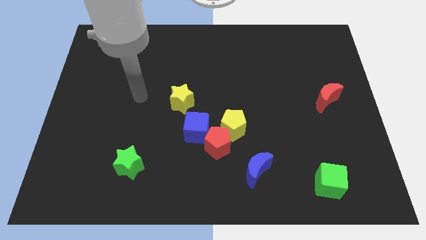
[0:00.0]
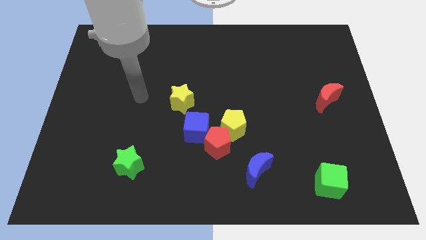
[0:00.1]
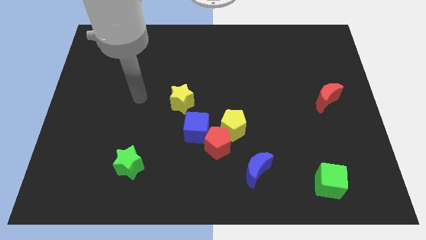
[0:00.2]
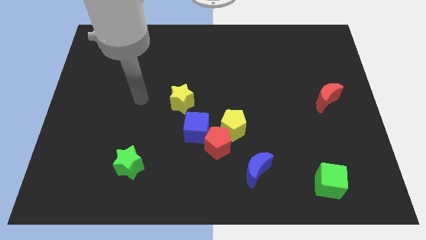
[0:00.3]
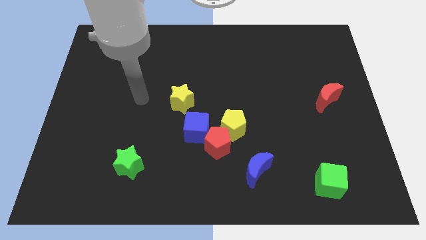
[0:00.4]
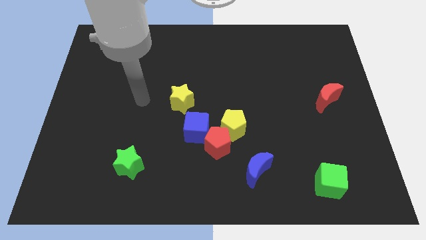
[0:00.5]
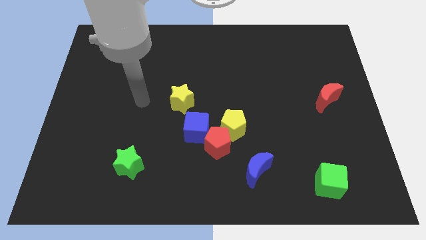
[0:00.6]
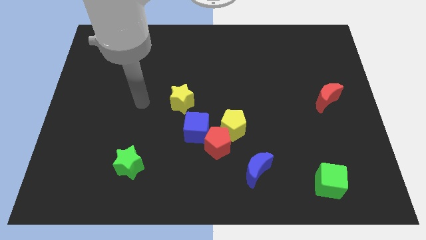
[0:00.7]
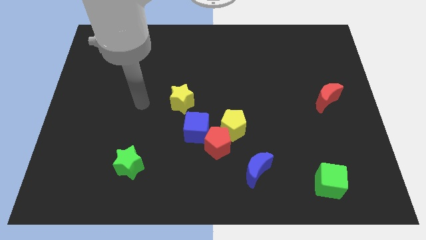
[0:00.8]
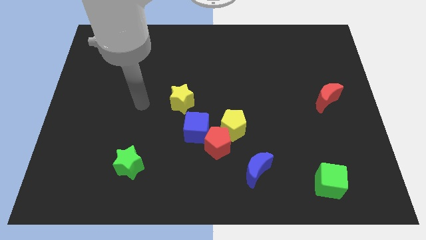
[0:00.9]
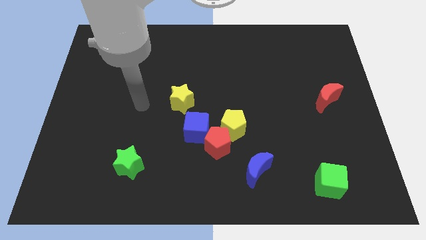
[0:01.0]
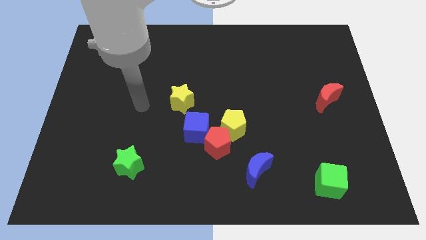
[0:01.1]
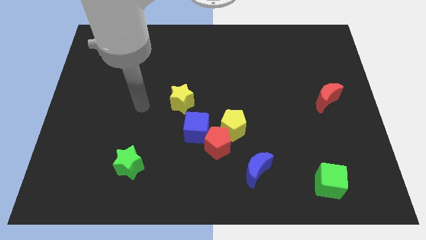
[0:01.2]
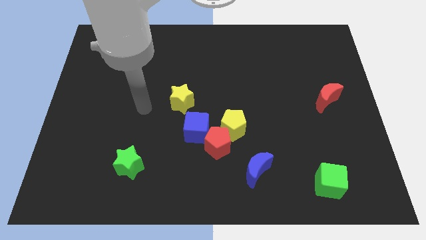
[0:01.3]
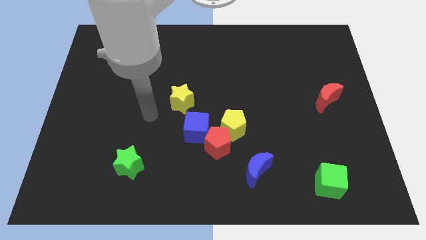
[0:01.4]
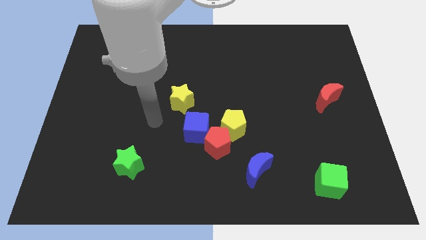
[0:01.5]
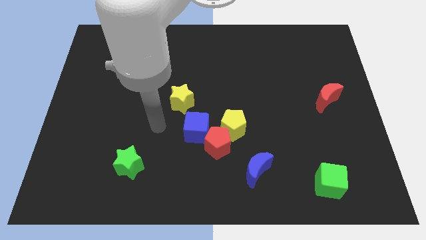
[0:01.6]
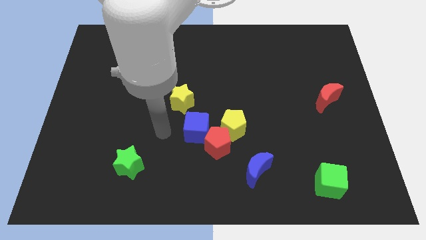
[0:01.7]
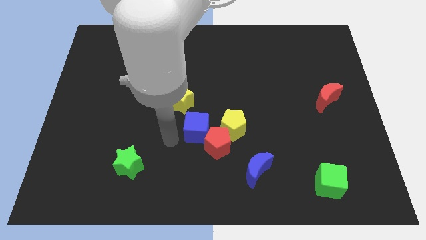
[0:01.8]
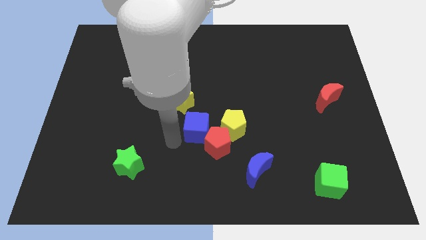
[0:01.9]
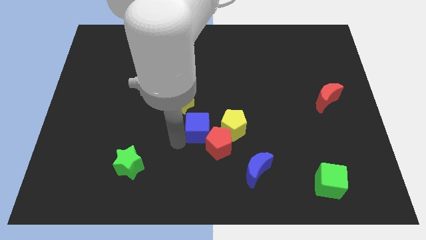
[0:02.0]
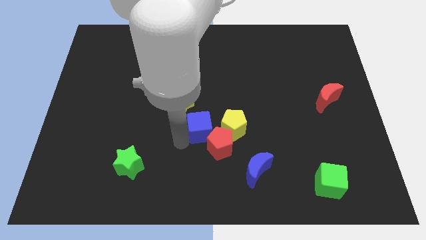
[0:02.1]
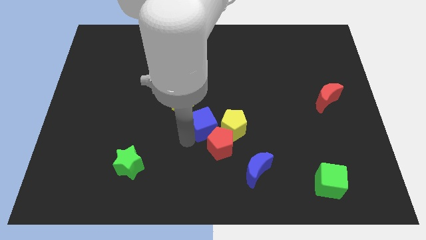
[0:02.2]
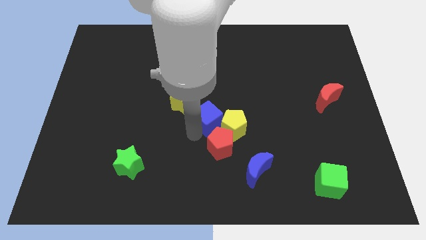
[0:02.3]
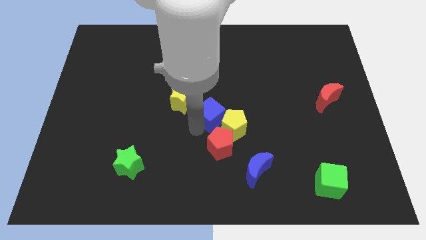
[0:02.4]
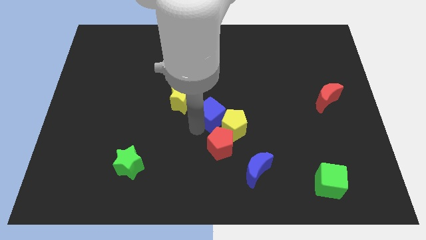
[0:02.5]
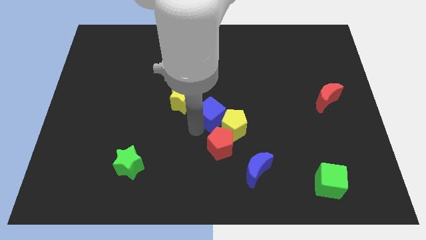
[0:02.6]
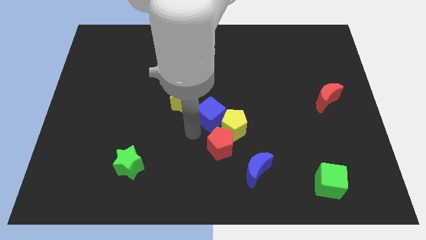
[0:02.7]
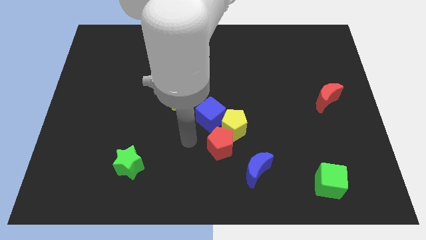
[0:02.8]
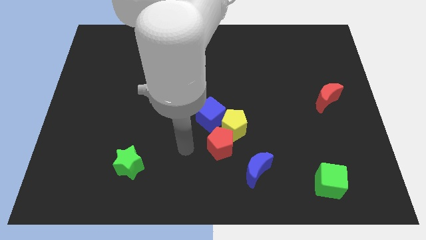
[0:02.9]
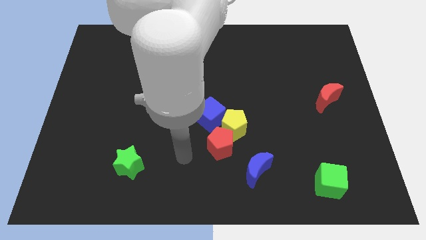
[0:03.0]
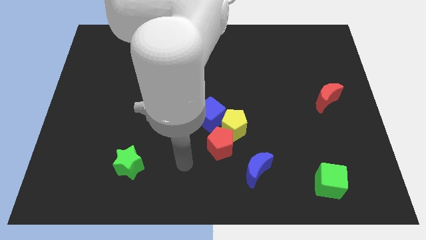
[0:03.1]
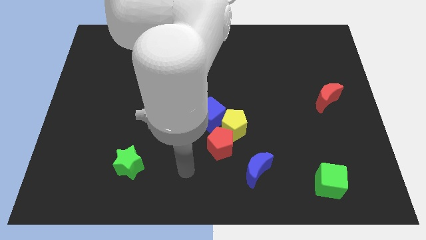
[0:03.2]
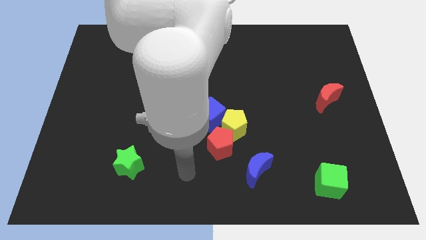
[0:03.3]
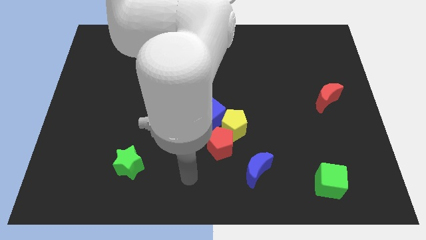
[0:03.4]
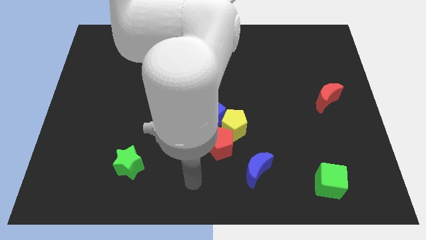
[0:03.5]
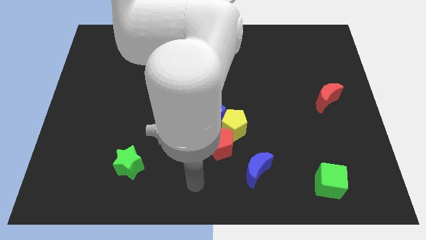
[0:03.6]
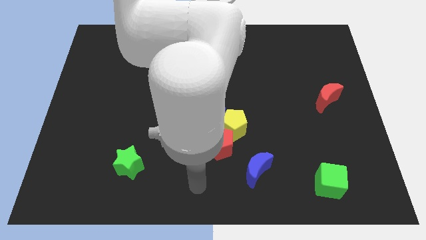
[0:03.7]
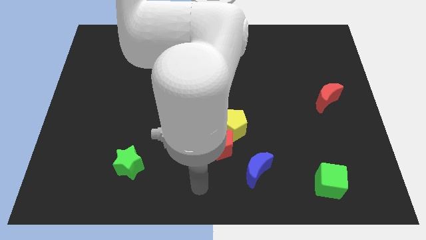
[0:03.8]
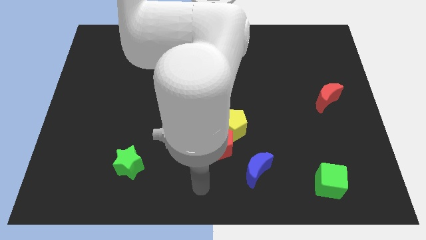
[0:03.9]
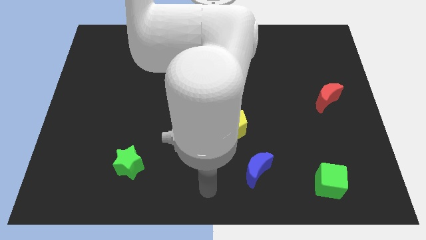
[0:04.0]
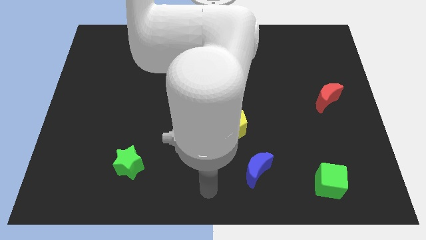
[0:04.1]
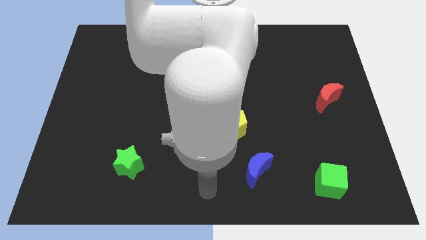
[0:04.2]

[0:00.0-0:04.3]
move blue cube to the left of yellow pentagon

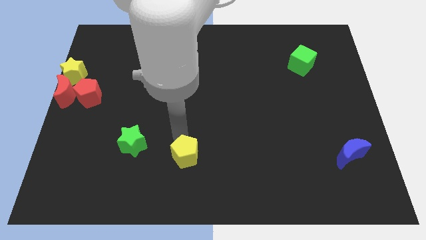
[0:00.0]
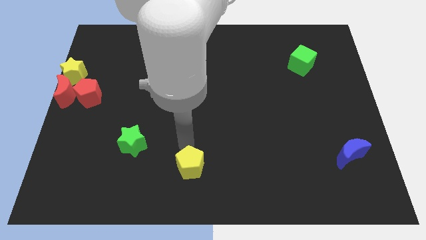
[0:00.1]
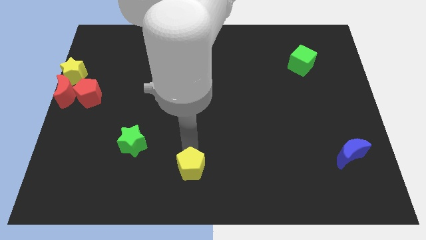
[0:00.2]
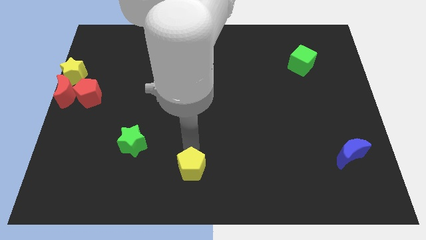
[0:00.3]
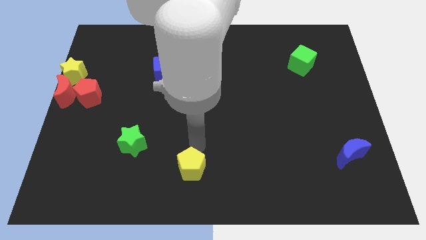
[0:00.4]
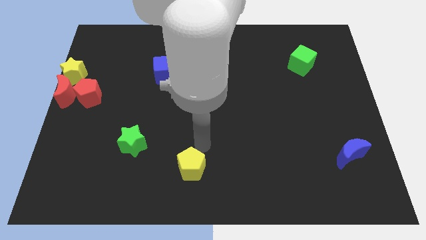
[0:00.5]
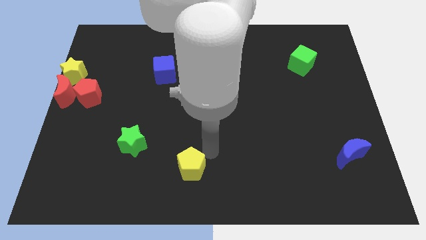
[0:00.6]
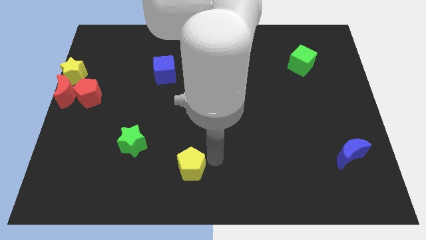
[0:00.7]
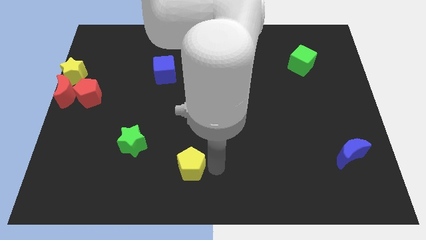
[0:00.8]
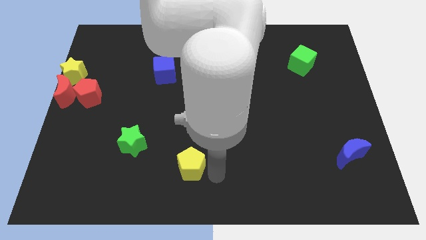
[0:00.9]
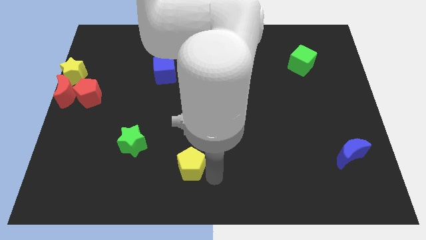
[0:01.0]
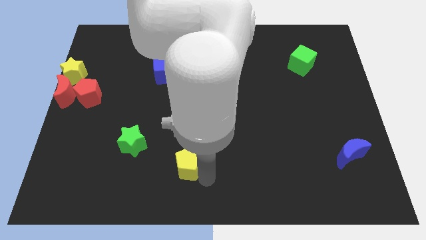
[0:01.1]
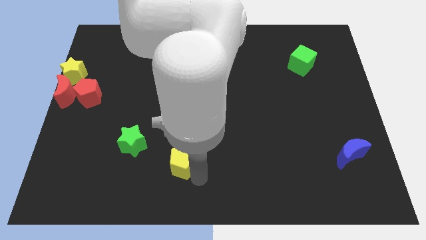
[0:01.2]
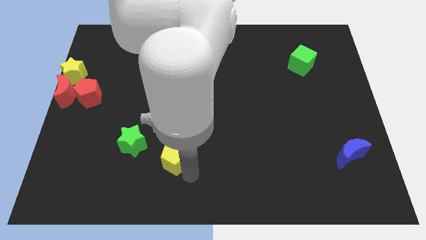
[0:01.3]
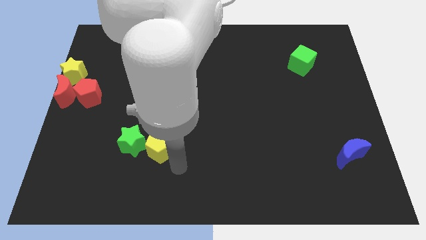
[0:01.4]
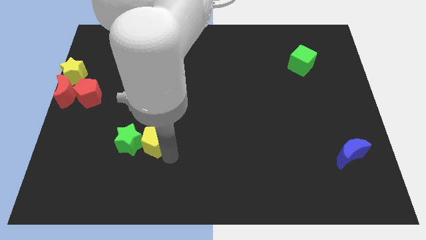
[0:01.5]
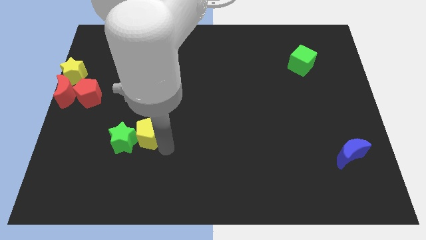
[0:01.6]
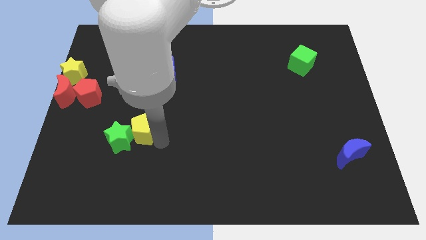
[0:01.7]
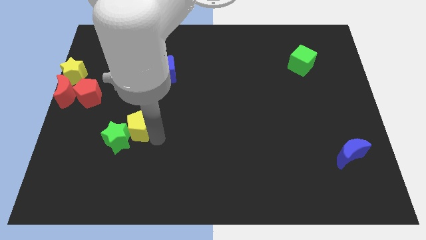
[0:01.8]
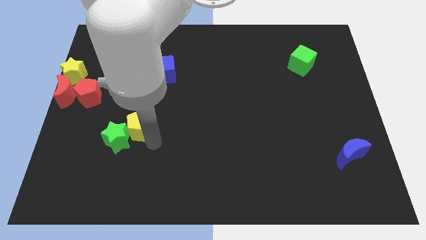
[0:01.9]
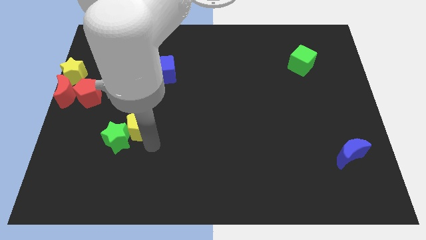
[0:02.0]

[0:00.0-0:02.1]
place the yellow pentagon towards the right side of the green star

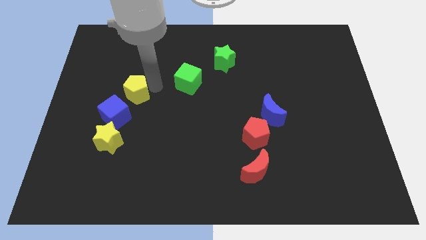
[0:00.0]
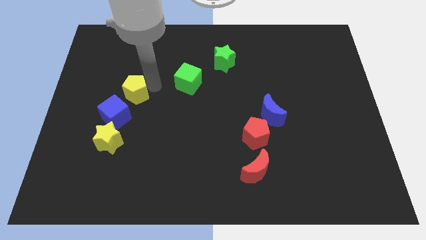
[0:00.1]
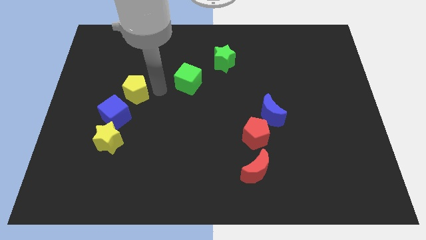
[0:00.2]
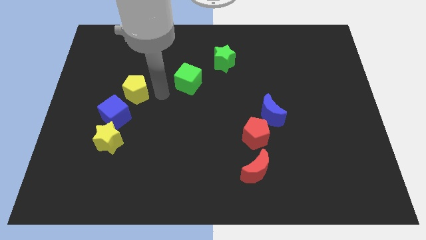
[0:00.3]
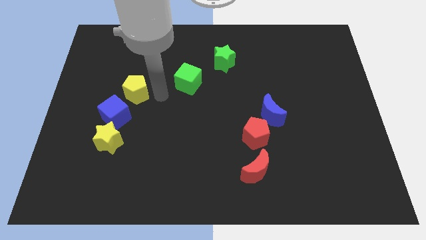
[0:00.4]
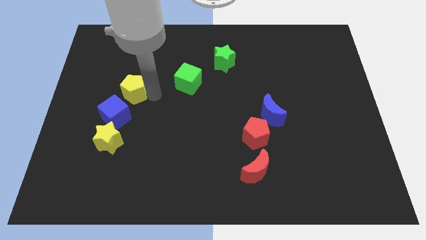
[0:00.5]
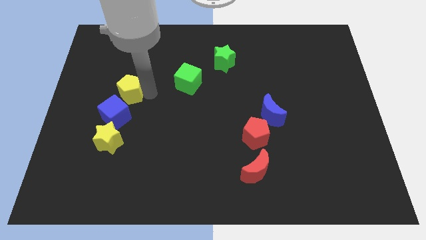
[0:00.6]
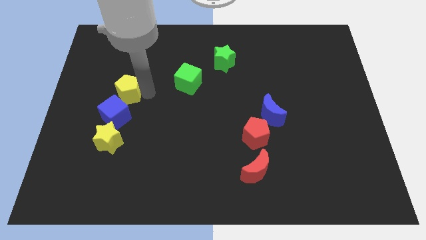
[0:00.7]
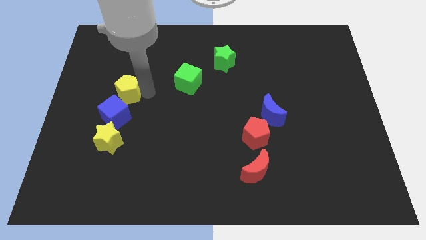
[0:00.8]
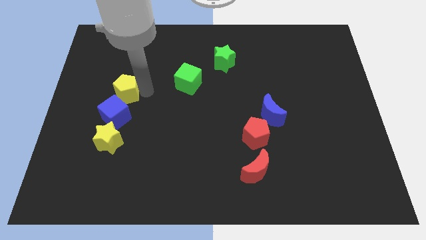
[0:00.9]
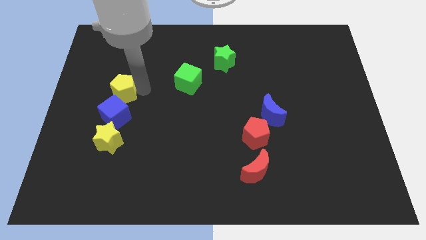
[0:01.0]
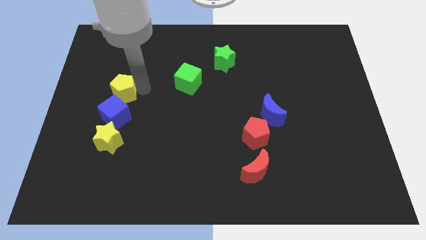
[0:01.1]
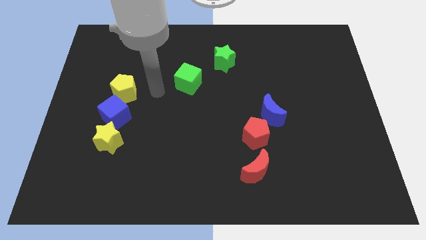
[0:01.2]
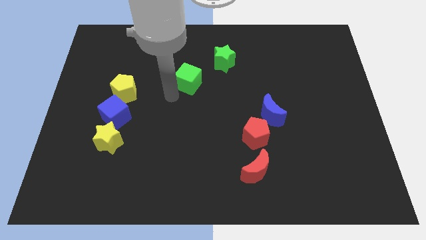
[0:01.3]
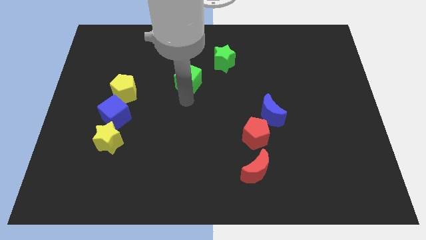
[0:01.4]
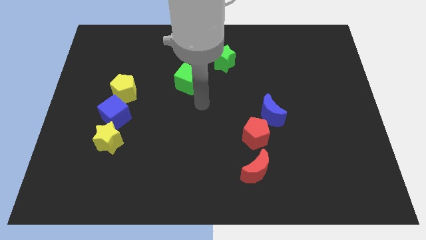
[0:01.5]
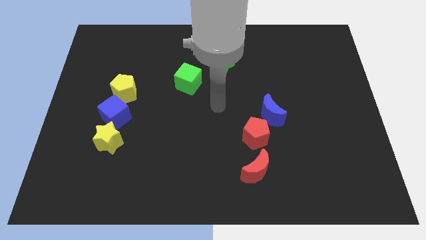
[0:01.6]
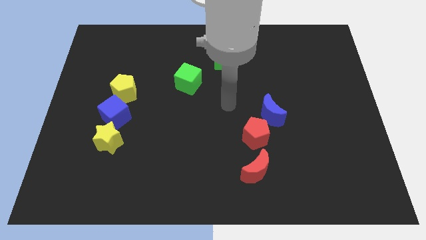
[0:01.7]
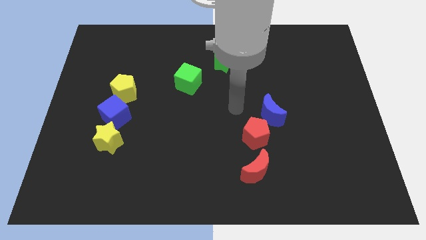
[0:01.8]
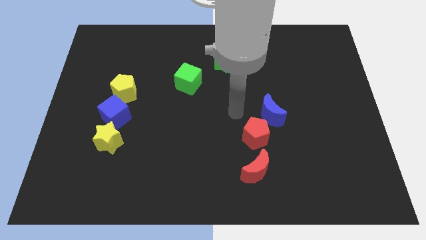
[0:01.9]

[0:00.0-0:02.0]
slide the yellow pentagon at the top center of the blue cube

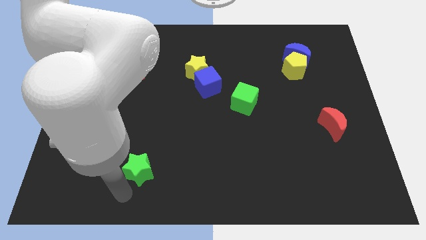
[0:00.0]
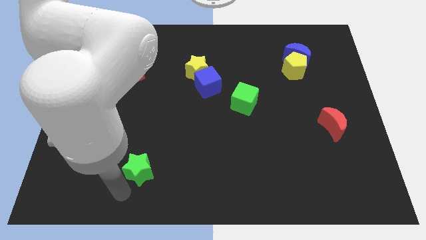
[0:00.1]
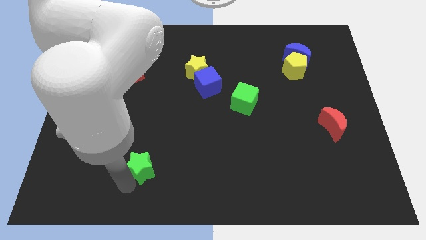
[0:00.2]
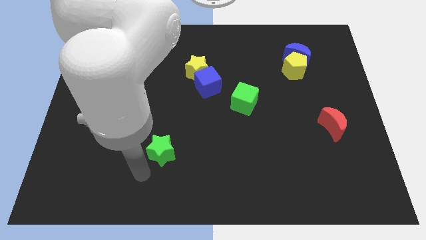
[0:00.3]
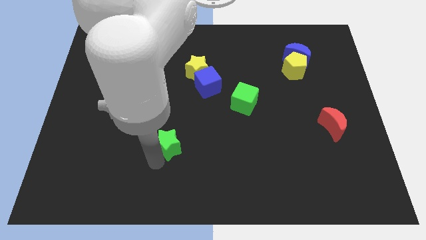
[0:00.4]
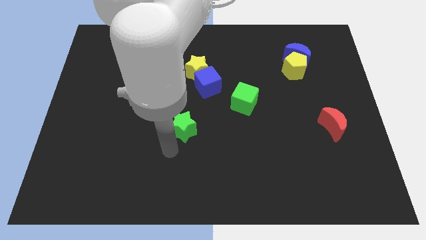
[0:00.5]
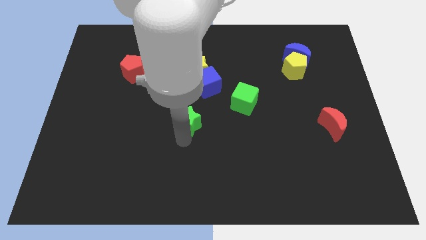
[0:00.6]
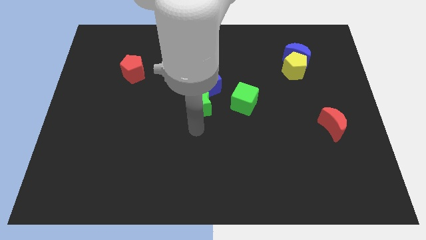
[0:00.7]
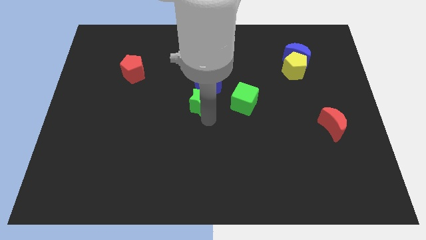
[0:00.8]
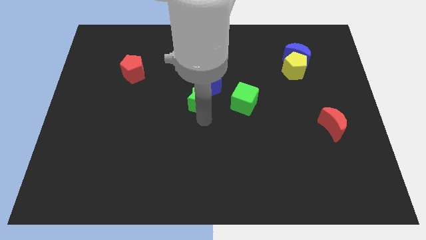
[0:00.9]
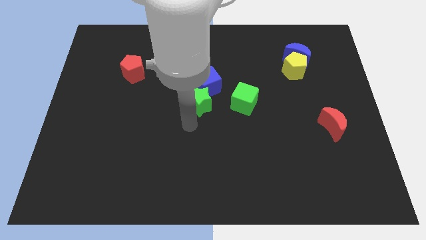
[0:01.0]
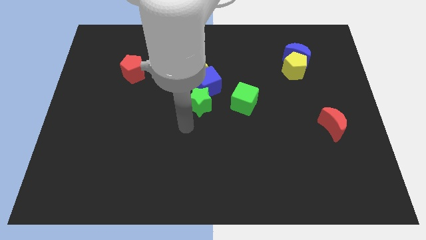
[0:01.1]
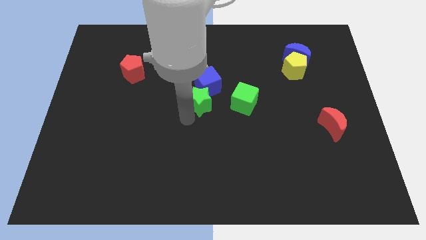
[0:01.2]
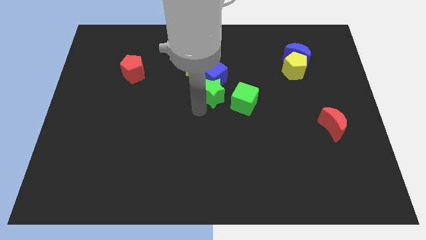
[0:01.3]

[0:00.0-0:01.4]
push green star to the bottom side of the blue cube
